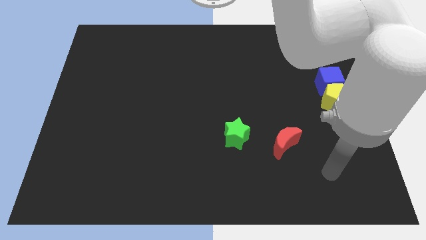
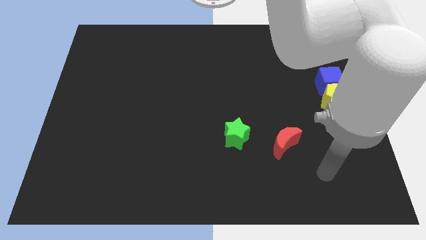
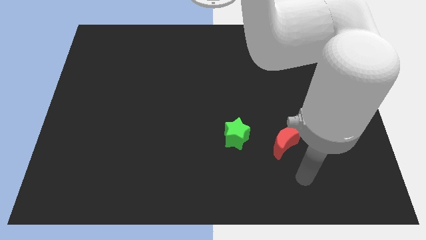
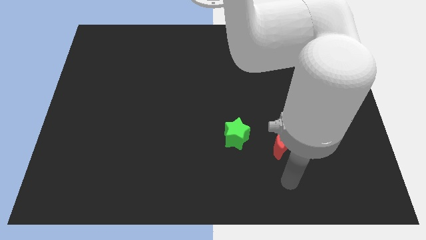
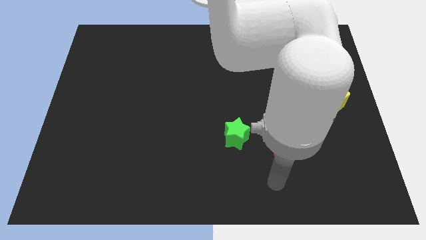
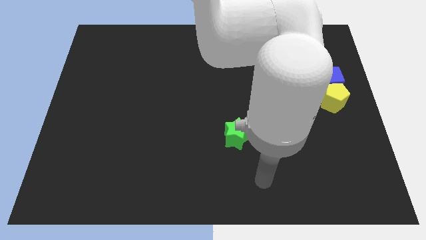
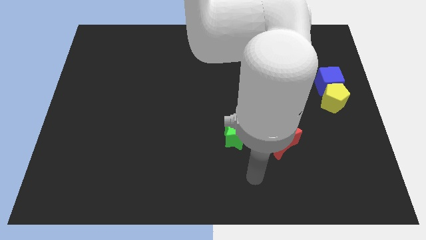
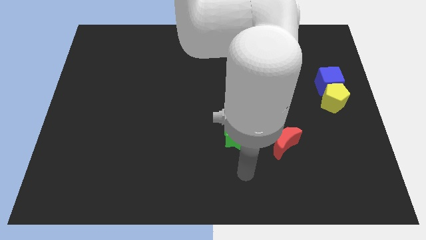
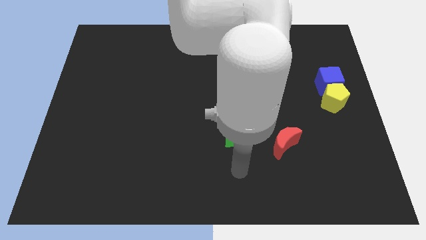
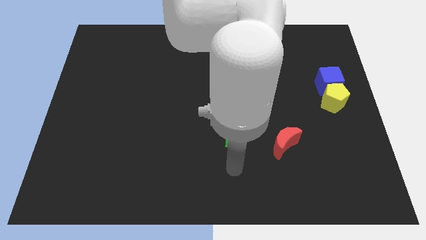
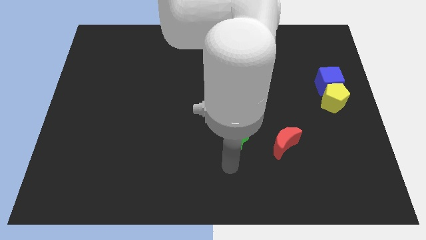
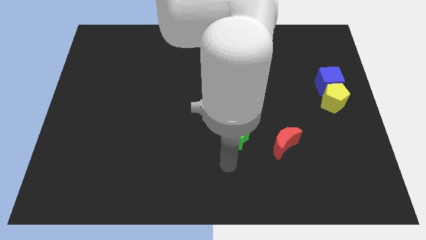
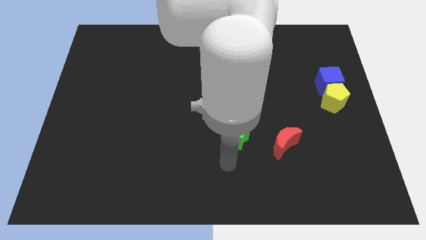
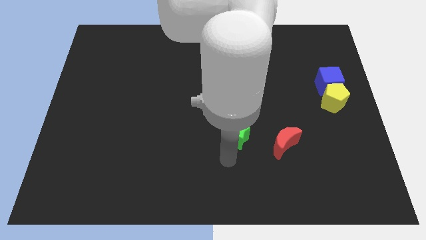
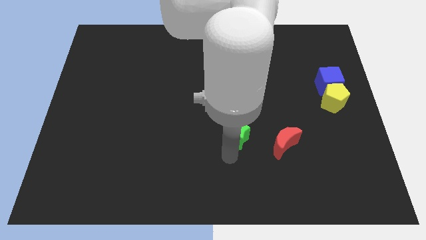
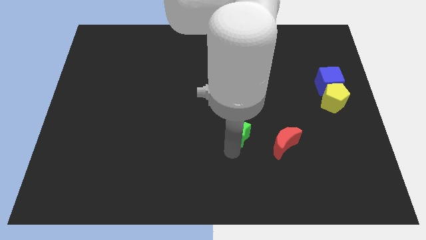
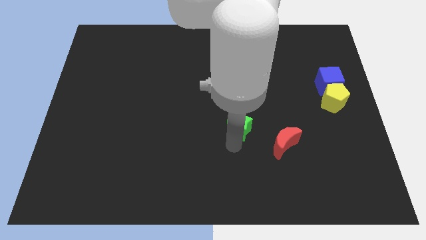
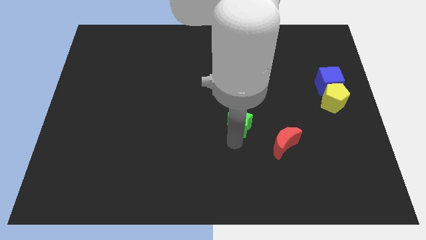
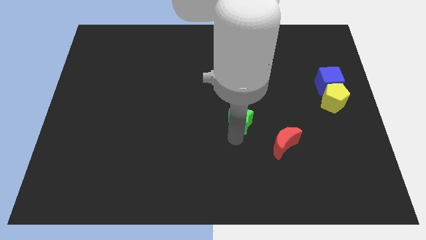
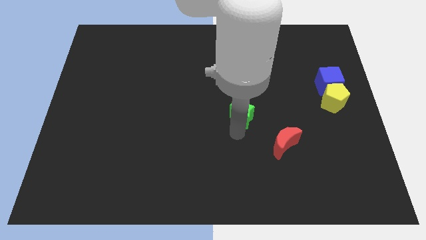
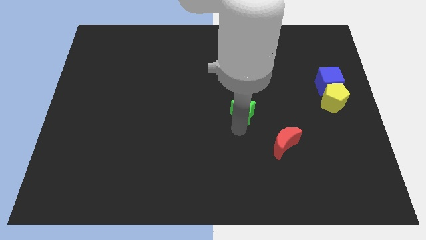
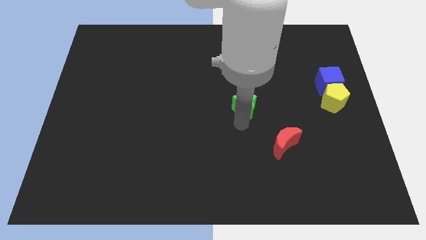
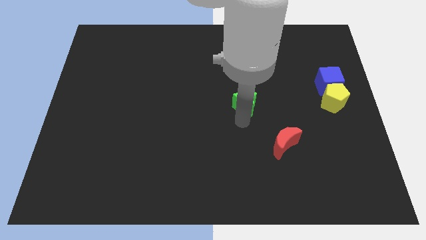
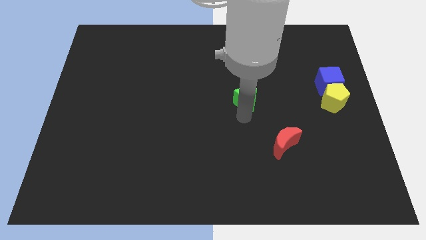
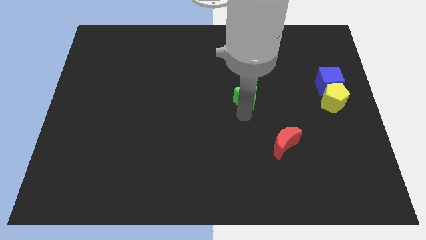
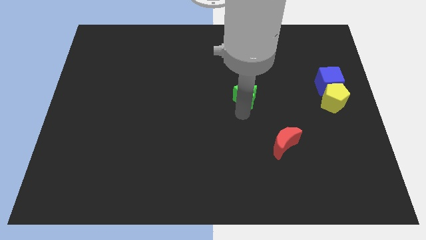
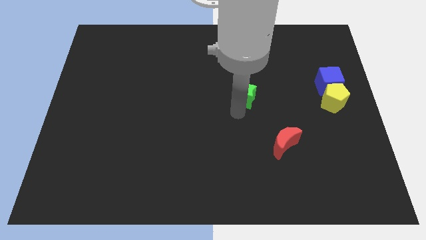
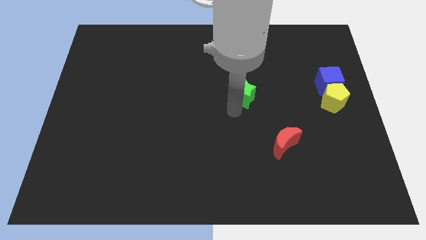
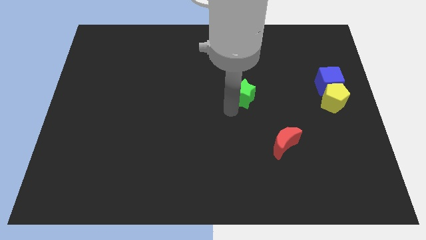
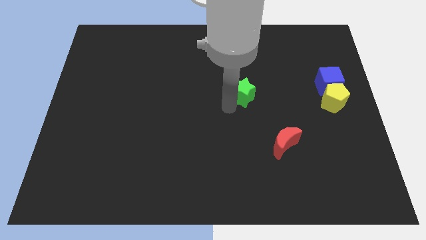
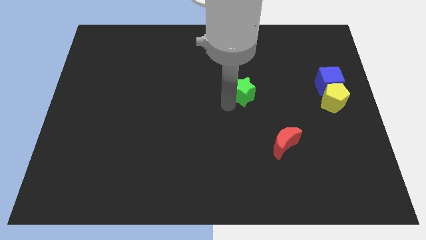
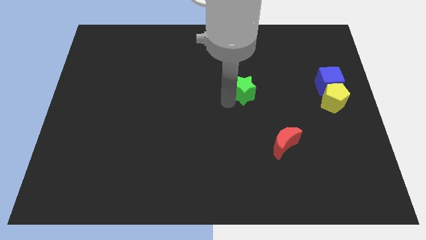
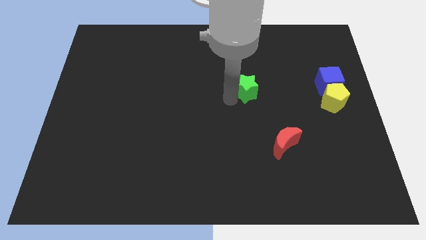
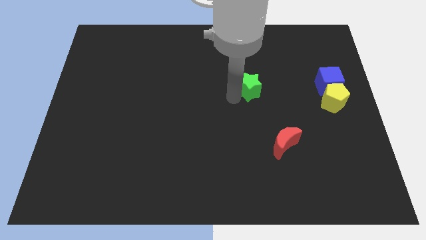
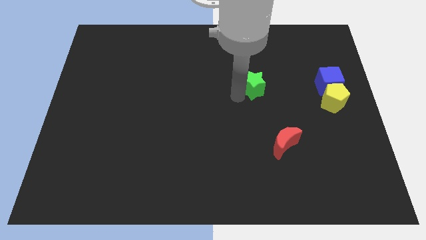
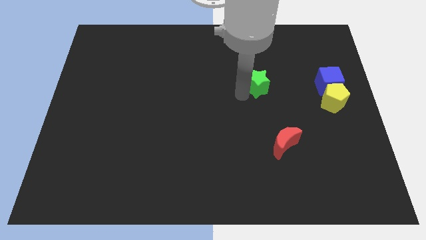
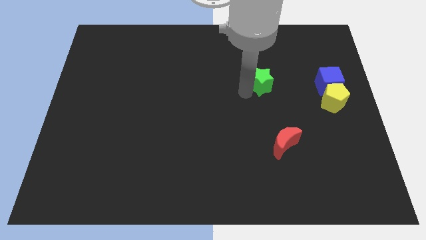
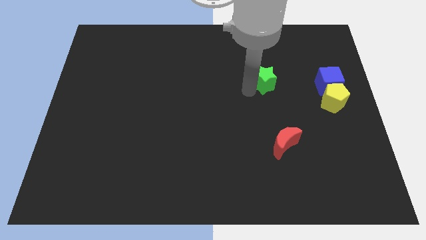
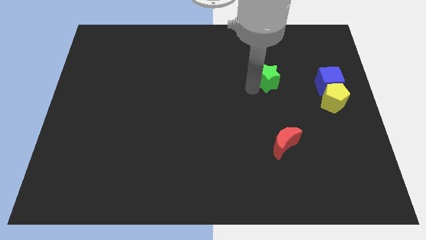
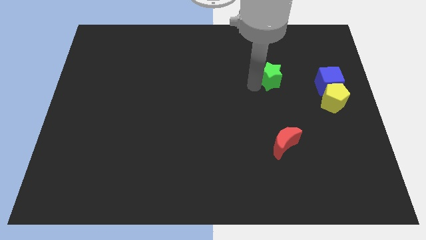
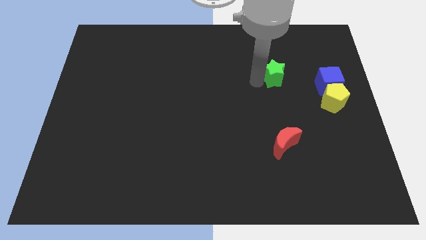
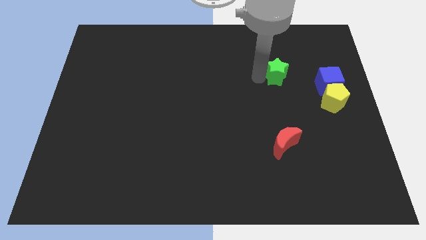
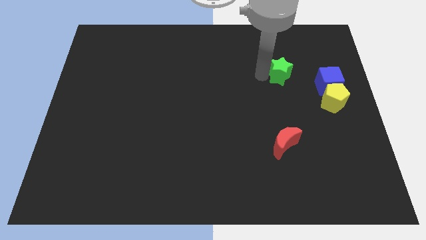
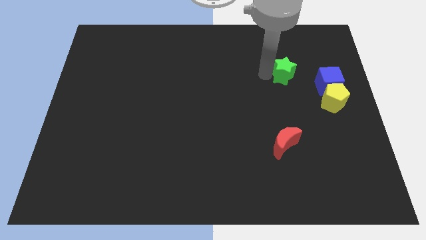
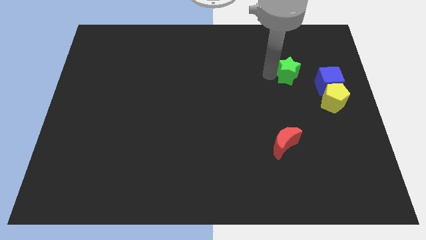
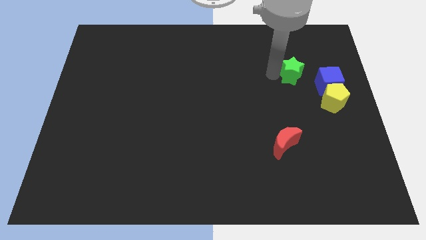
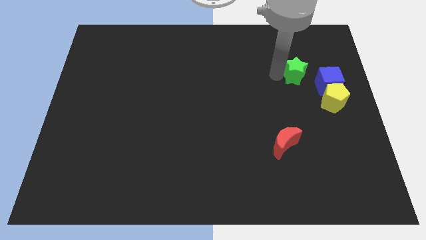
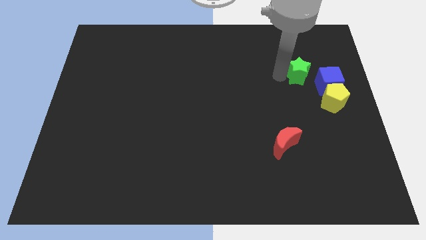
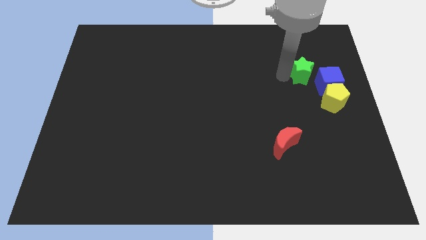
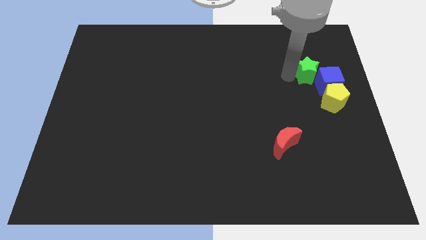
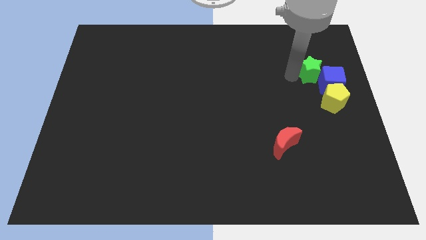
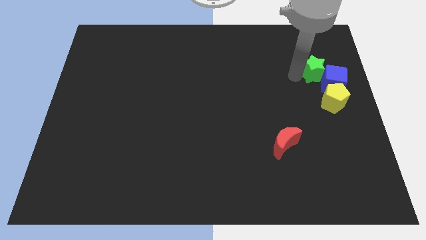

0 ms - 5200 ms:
push the green block to the blue block

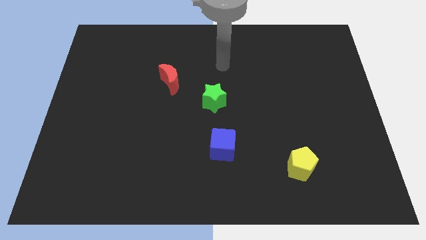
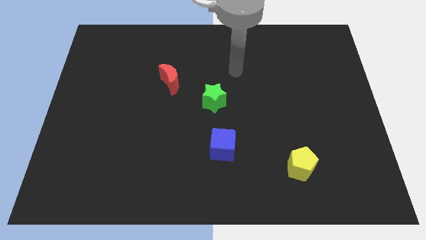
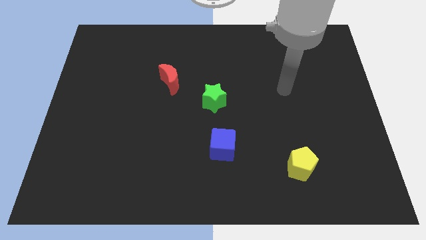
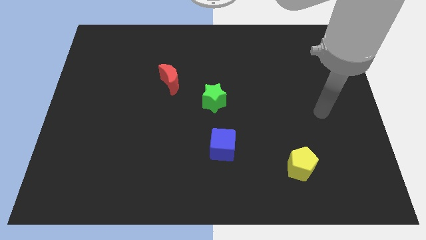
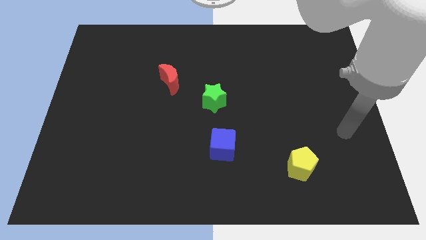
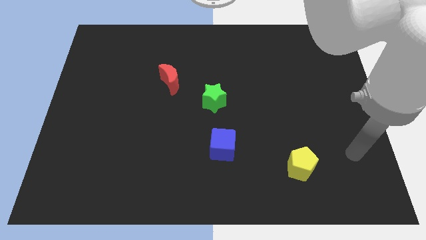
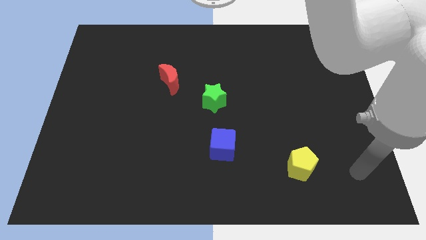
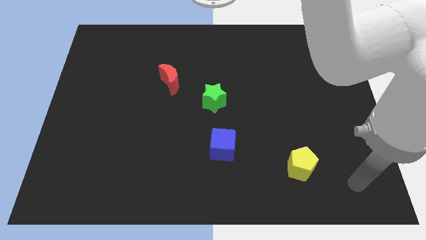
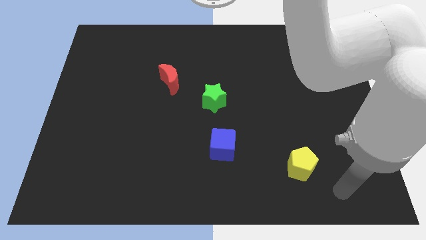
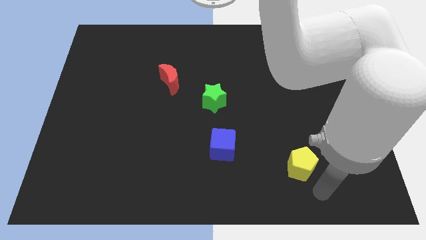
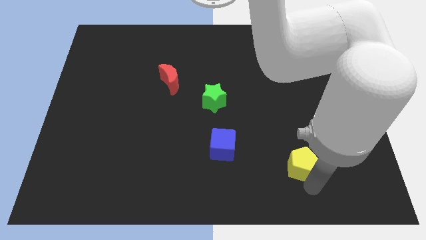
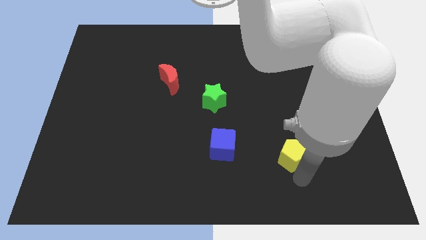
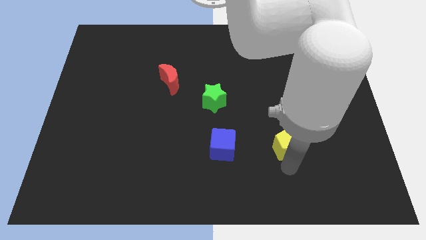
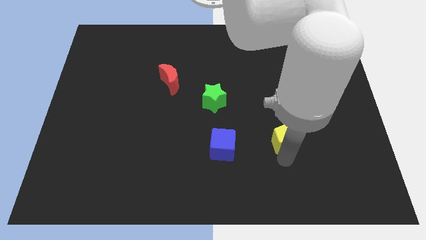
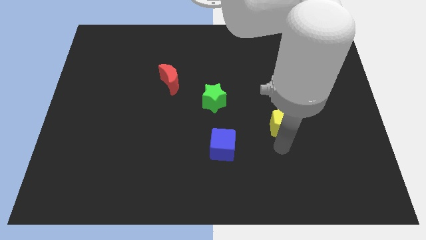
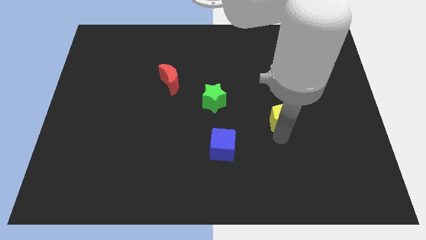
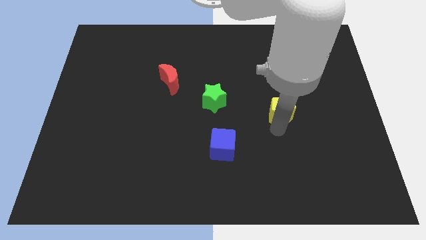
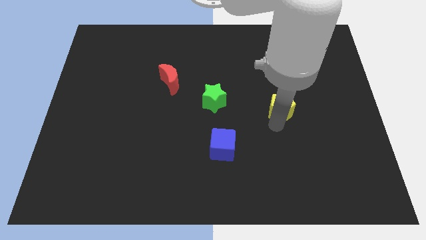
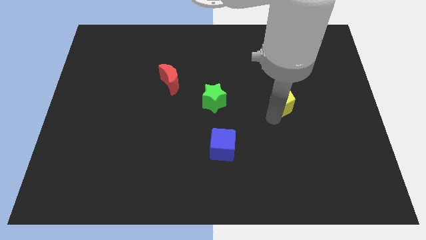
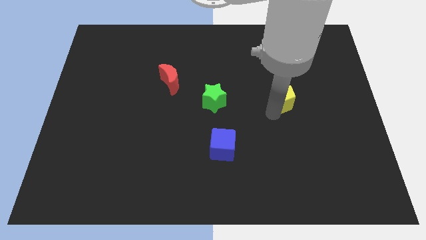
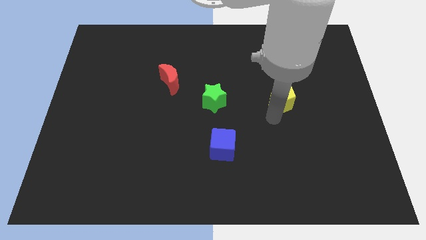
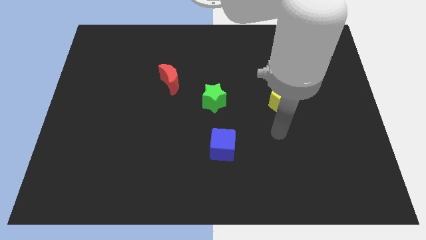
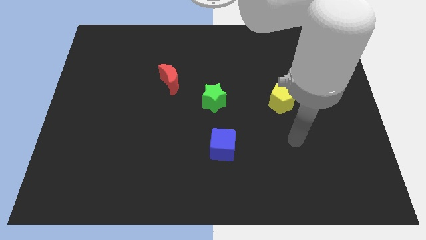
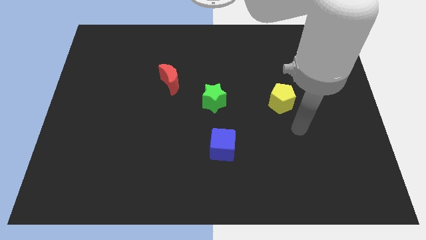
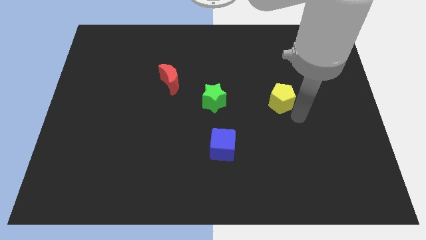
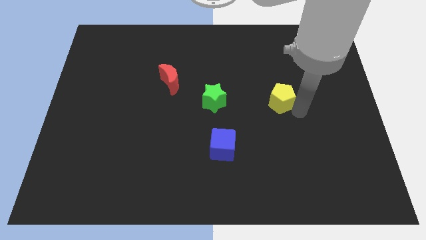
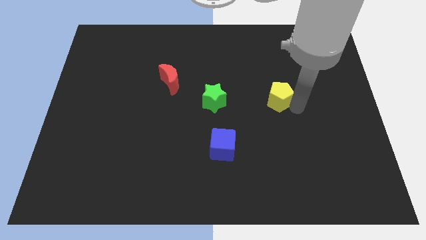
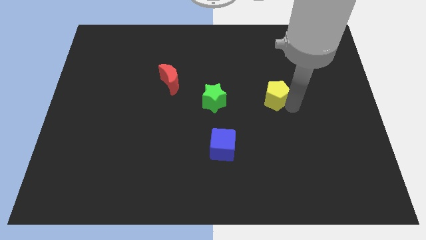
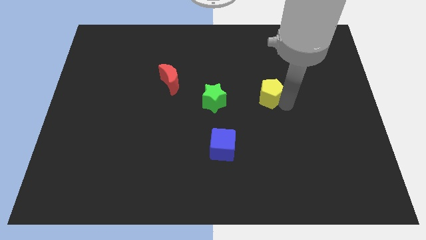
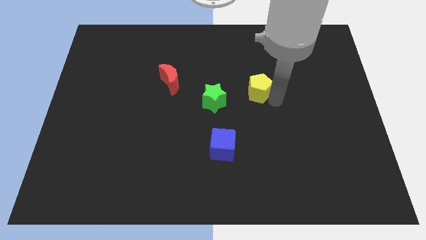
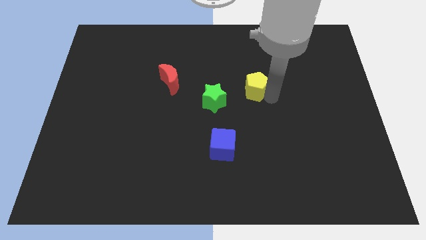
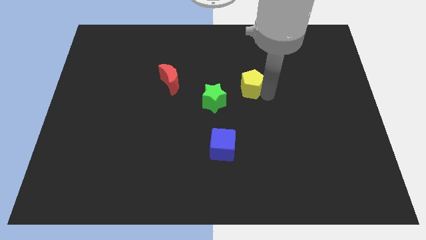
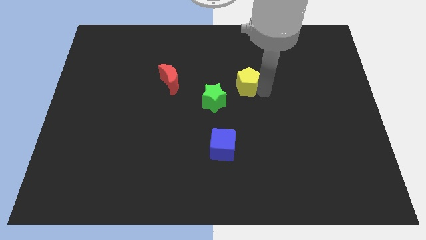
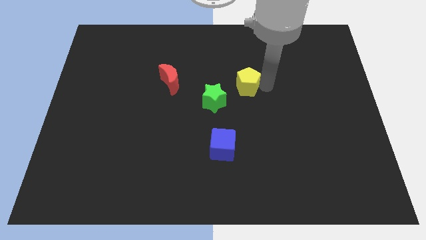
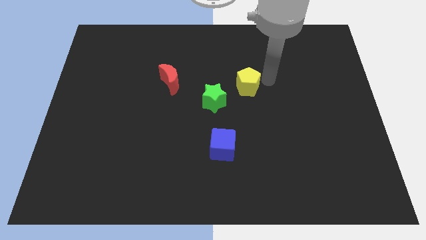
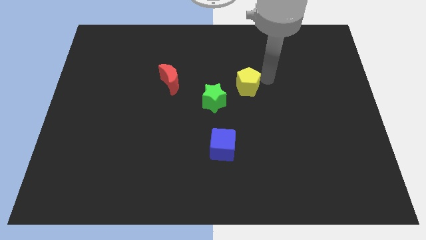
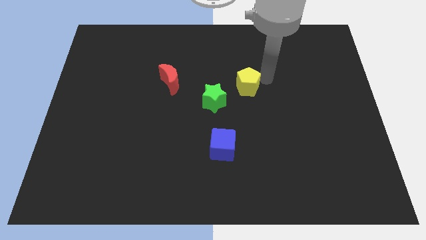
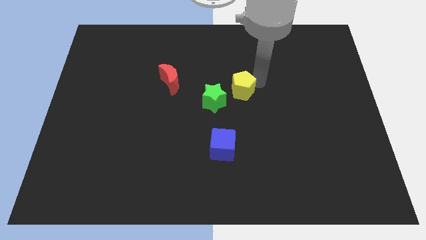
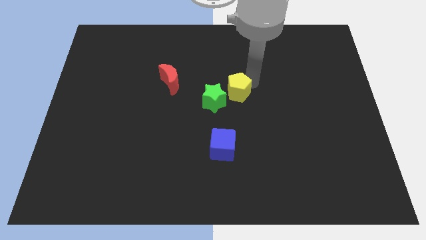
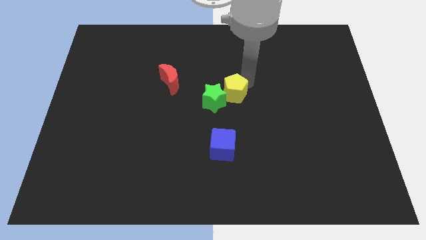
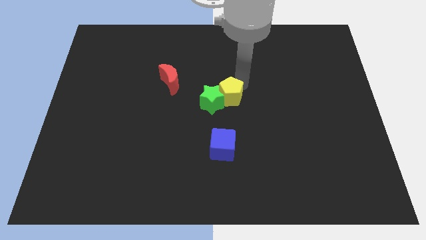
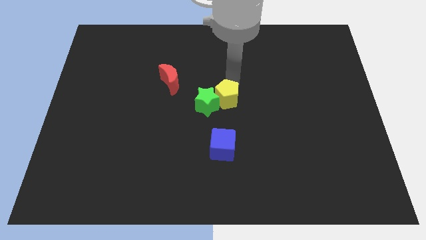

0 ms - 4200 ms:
move the yellow pentagon to the green star
